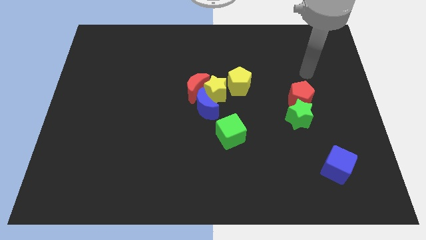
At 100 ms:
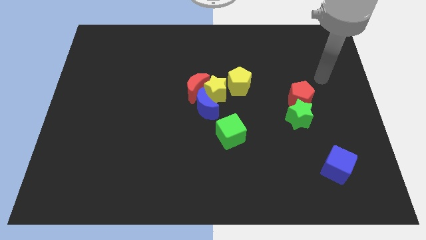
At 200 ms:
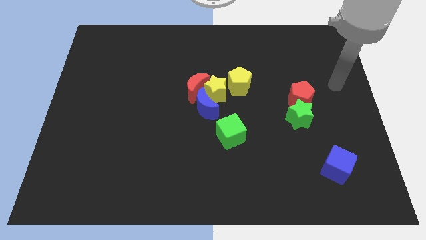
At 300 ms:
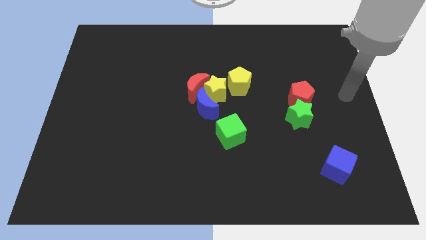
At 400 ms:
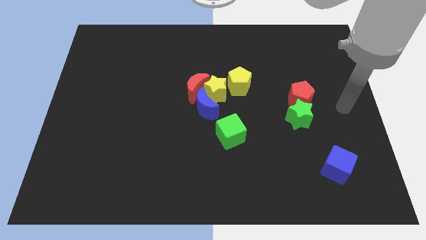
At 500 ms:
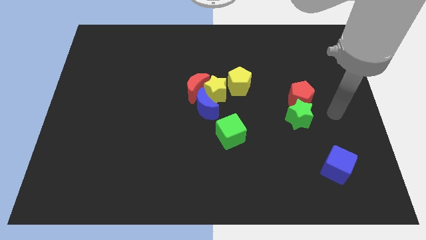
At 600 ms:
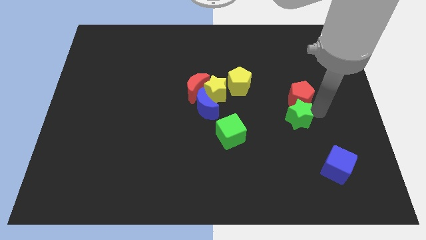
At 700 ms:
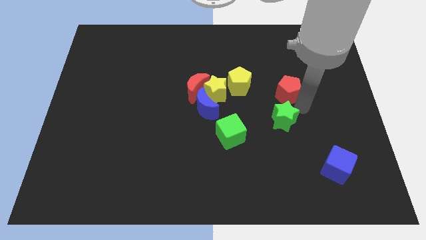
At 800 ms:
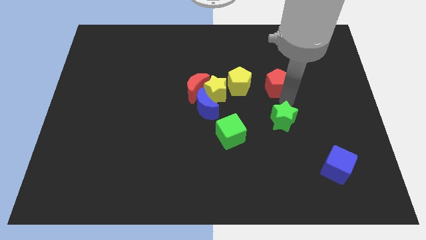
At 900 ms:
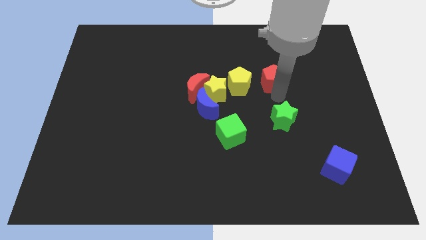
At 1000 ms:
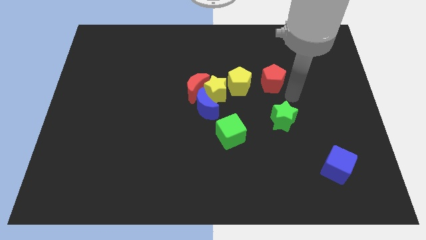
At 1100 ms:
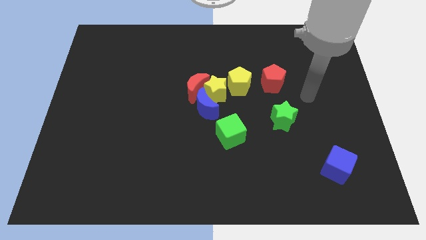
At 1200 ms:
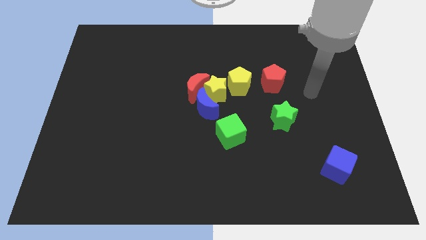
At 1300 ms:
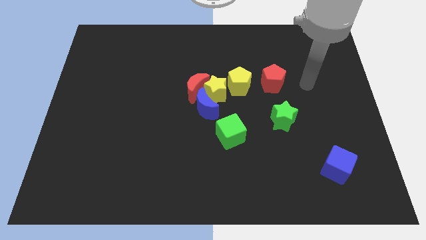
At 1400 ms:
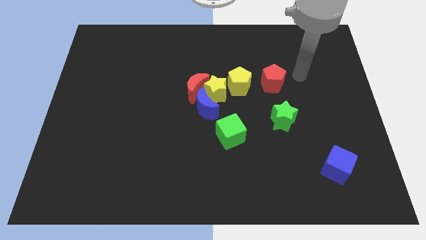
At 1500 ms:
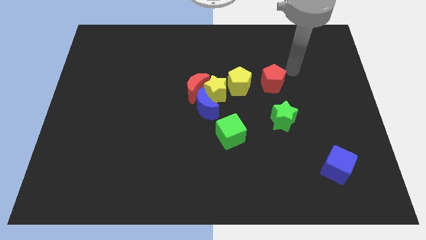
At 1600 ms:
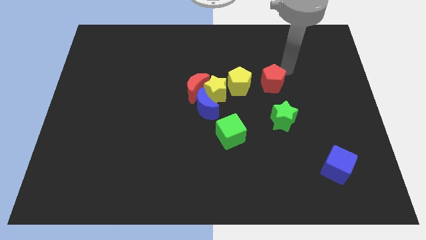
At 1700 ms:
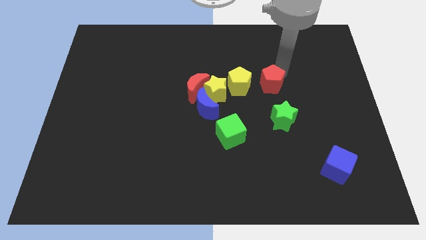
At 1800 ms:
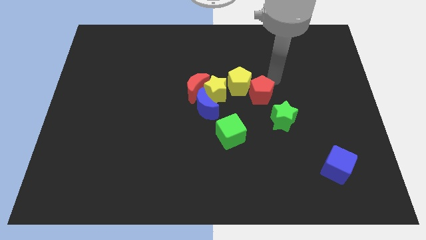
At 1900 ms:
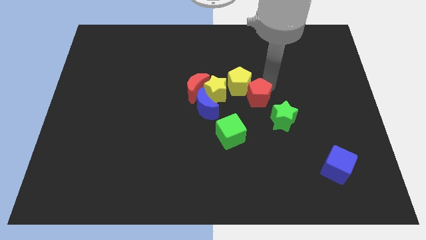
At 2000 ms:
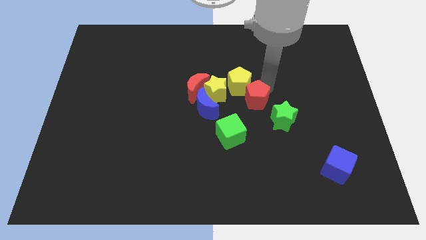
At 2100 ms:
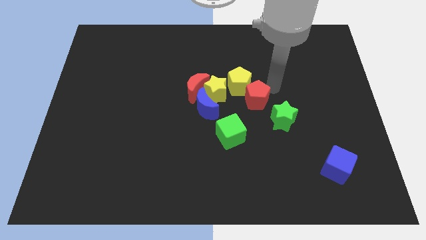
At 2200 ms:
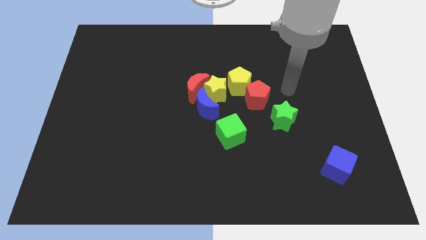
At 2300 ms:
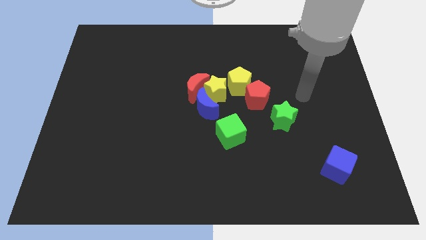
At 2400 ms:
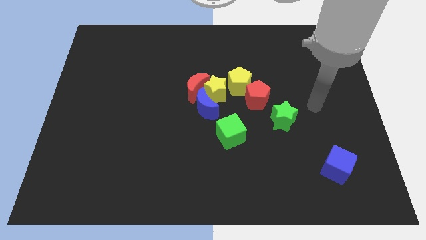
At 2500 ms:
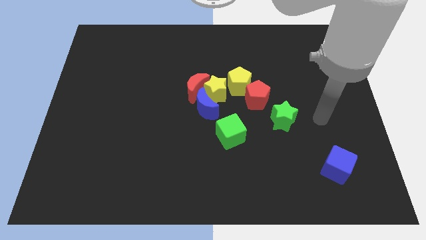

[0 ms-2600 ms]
put the red pentagon at the bottom right of the yellow pentagon

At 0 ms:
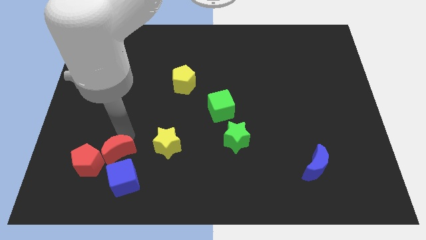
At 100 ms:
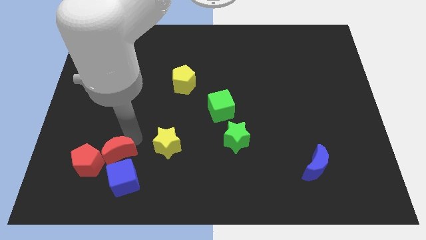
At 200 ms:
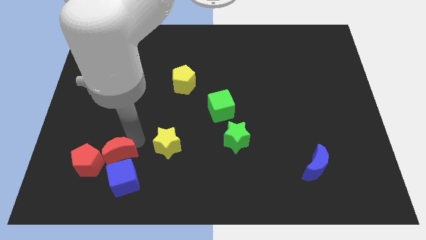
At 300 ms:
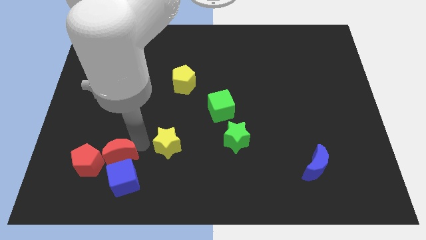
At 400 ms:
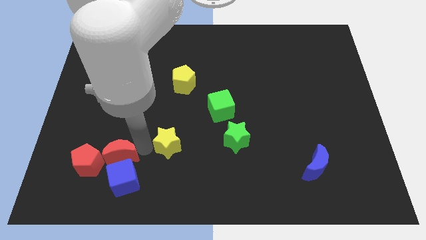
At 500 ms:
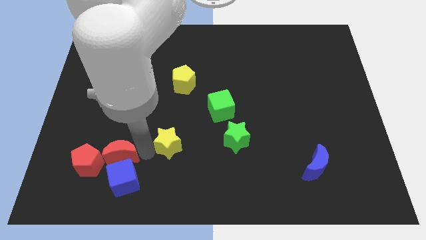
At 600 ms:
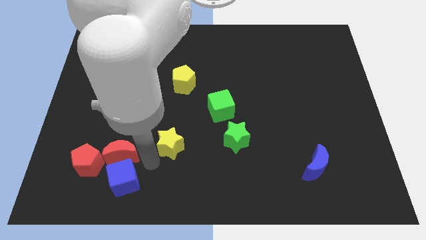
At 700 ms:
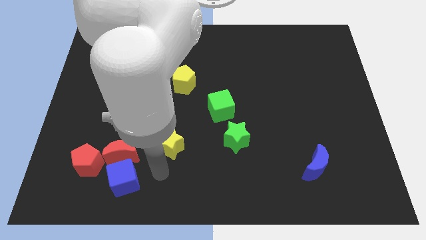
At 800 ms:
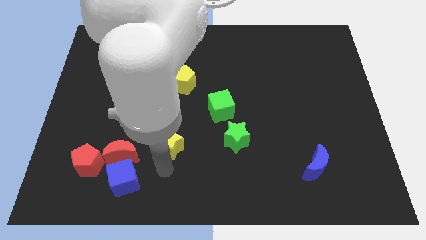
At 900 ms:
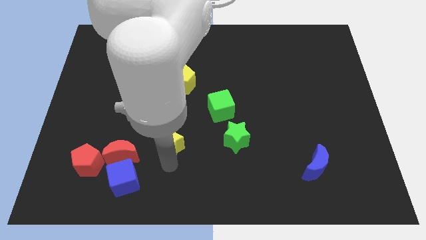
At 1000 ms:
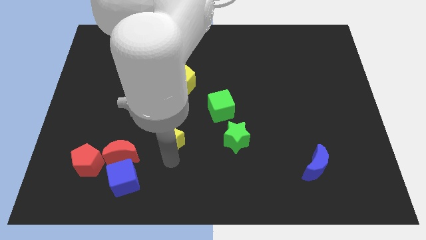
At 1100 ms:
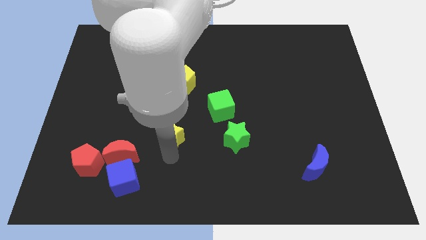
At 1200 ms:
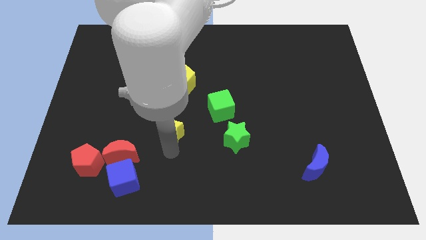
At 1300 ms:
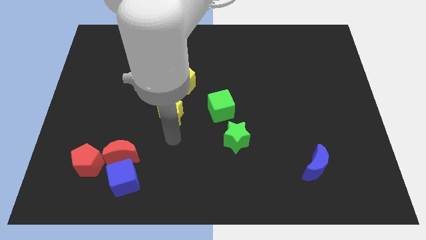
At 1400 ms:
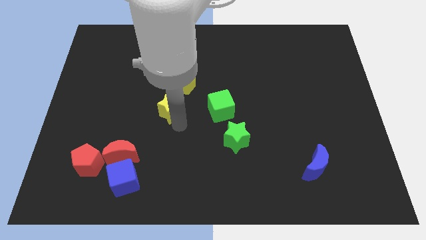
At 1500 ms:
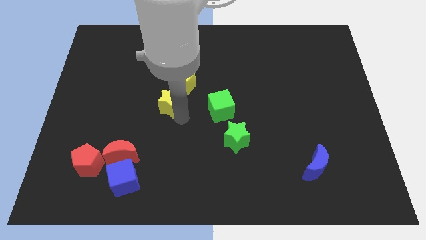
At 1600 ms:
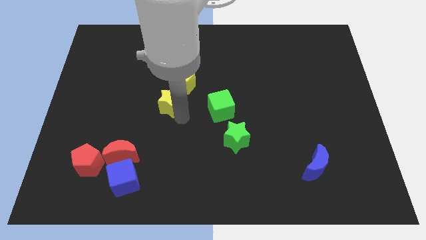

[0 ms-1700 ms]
place yellow star to the left of green cube

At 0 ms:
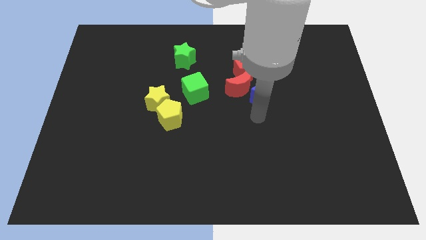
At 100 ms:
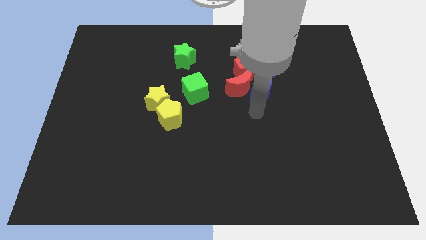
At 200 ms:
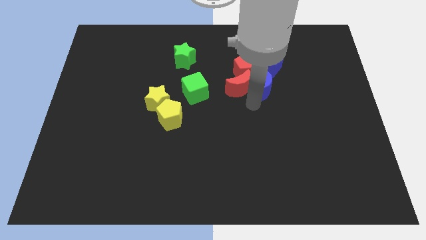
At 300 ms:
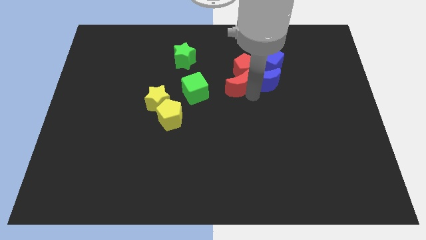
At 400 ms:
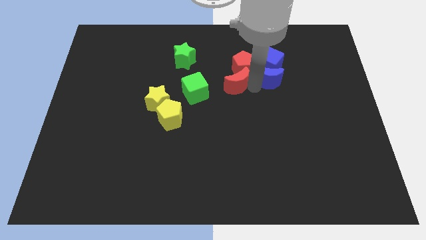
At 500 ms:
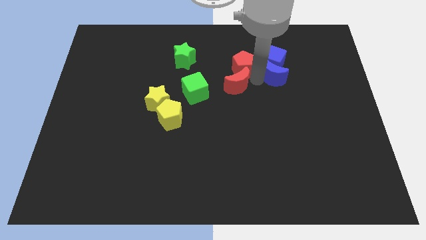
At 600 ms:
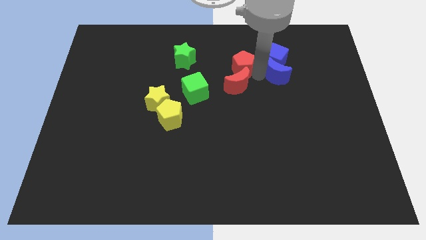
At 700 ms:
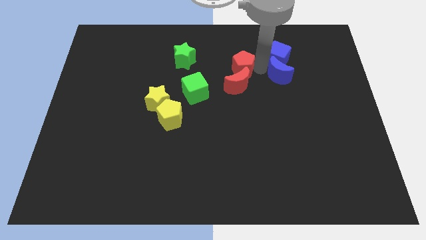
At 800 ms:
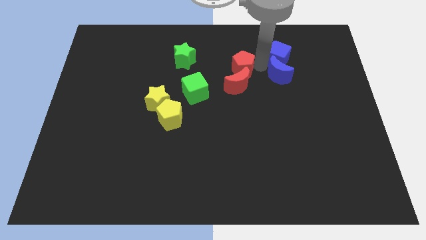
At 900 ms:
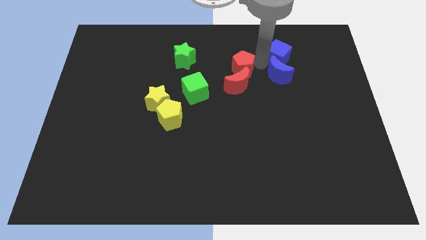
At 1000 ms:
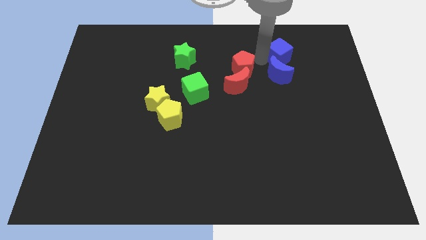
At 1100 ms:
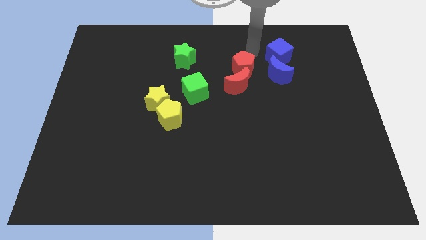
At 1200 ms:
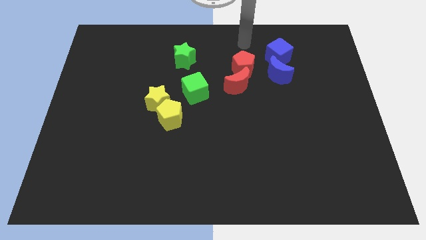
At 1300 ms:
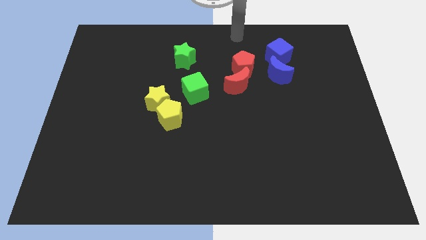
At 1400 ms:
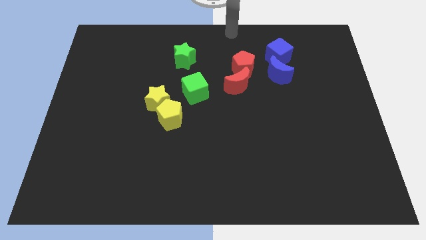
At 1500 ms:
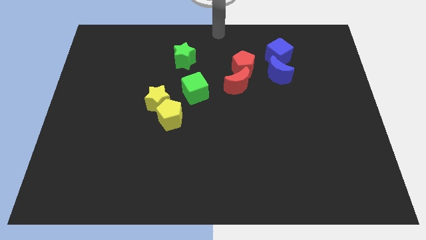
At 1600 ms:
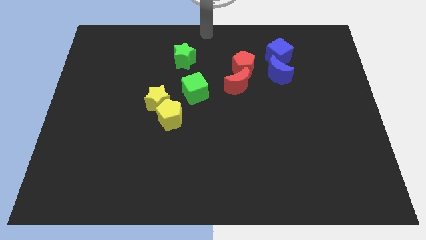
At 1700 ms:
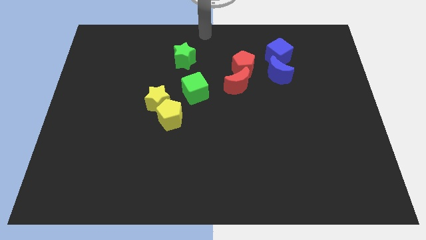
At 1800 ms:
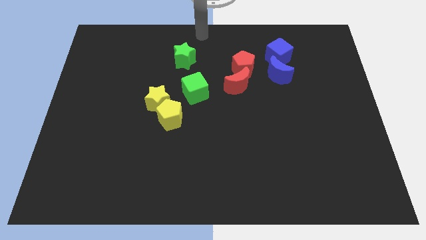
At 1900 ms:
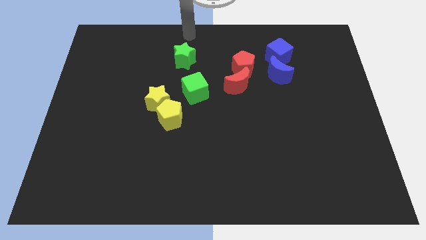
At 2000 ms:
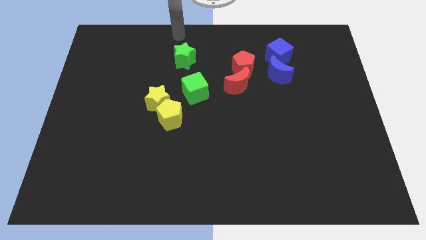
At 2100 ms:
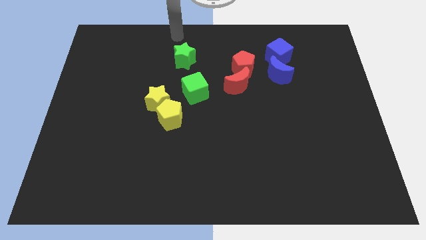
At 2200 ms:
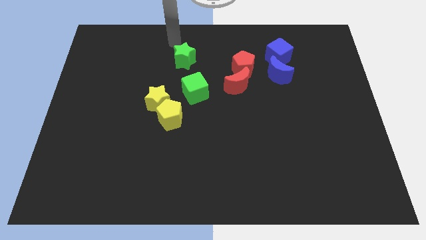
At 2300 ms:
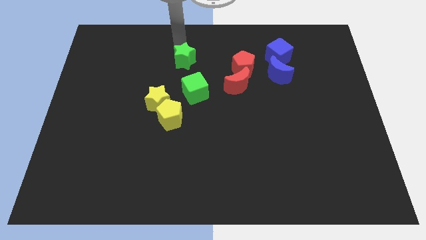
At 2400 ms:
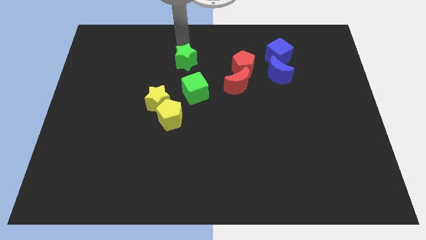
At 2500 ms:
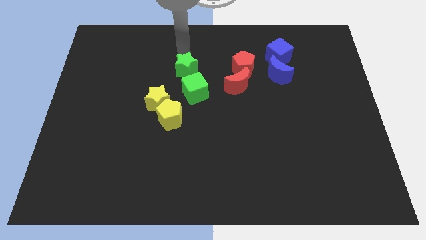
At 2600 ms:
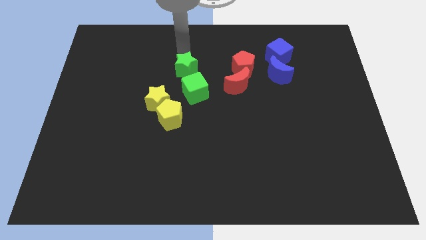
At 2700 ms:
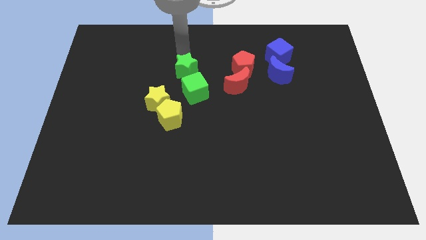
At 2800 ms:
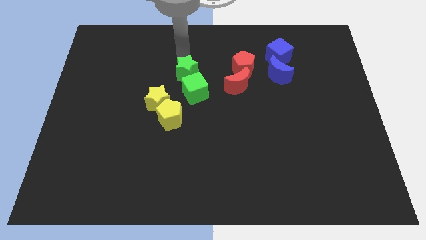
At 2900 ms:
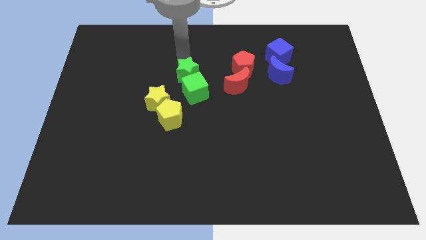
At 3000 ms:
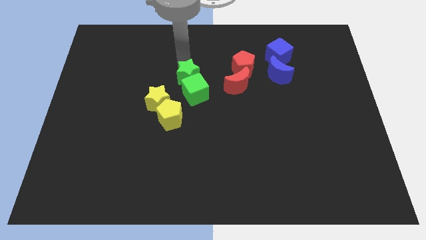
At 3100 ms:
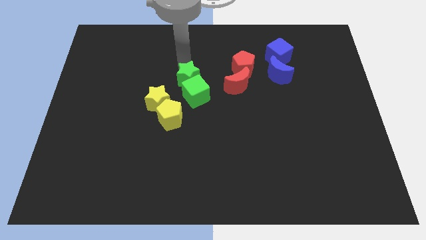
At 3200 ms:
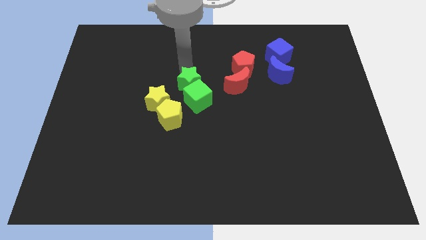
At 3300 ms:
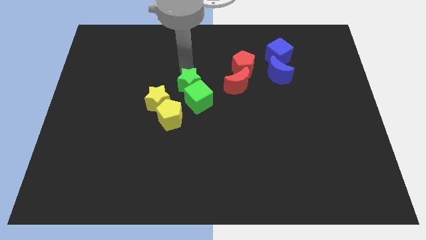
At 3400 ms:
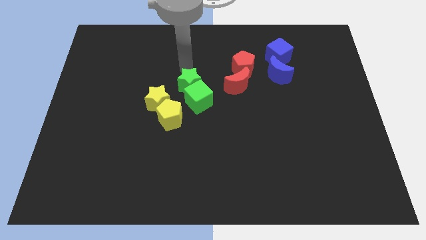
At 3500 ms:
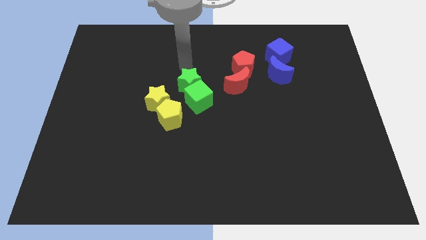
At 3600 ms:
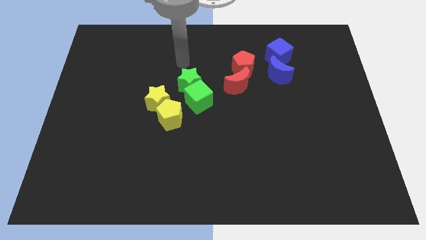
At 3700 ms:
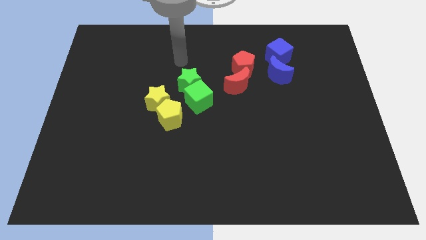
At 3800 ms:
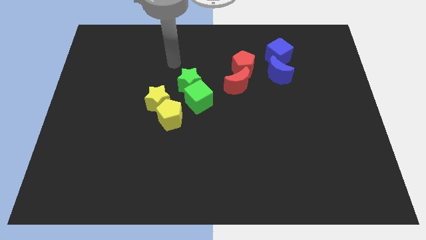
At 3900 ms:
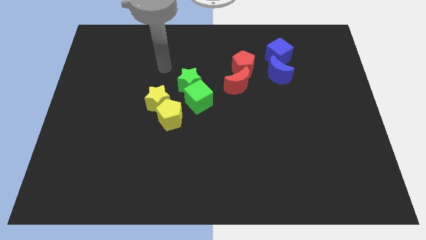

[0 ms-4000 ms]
place all the same color blocks in a diagonal line

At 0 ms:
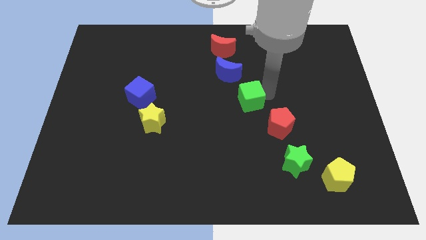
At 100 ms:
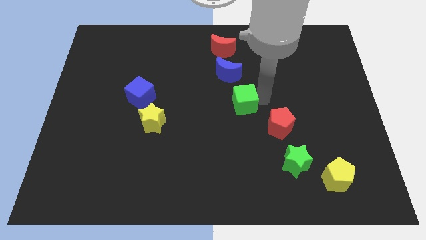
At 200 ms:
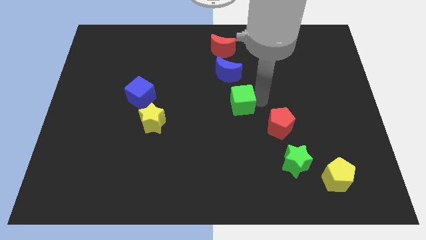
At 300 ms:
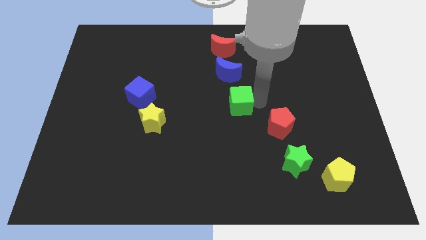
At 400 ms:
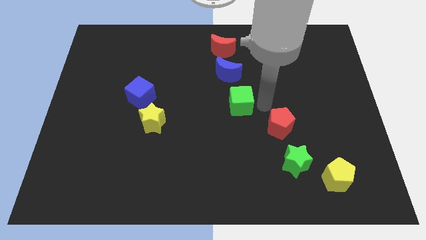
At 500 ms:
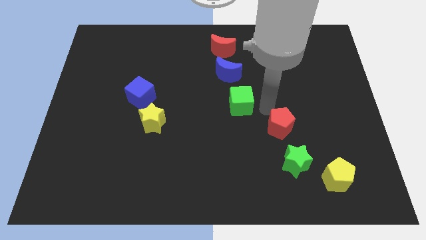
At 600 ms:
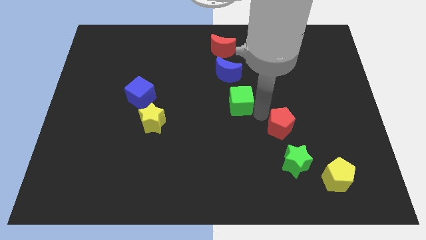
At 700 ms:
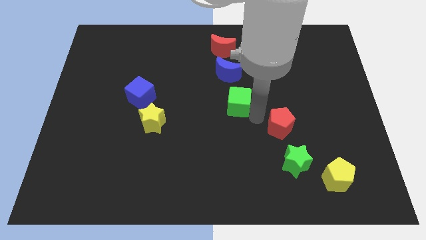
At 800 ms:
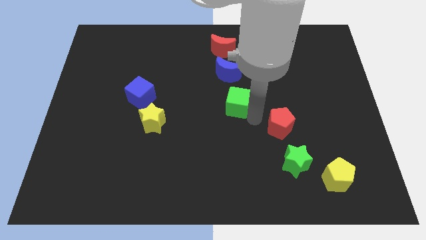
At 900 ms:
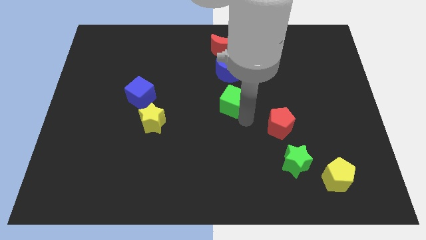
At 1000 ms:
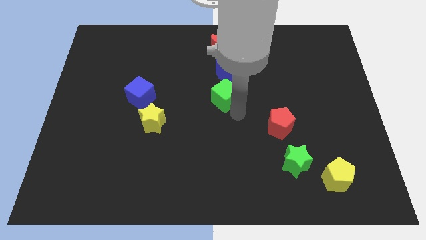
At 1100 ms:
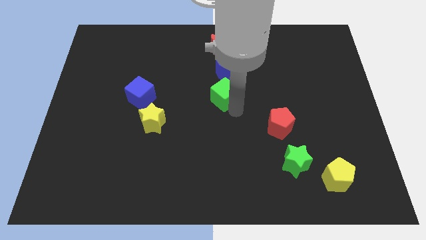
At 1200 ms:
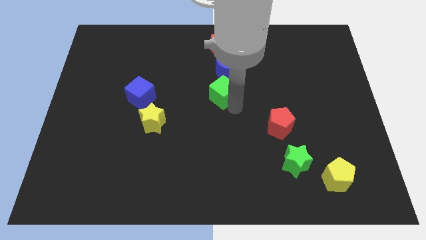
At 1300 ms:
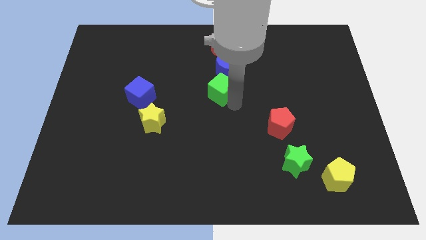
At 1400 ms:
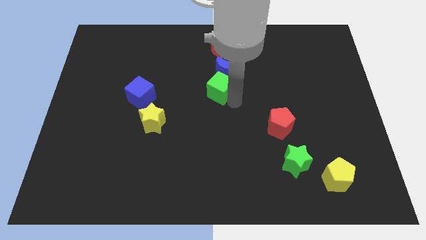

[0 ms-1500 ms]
put the green cube vertically below the blue moon